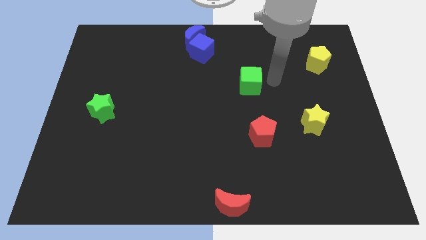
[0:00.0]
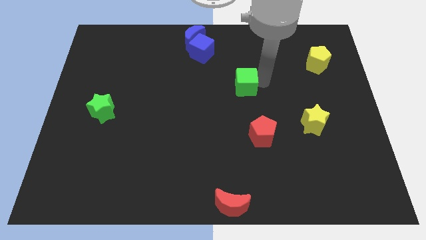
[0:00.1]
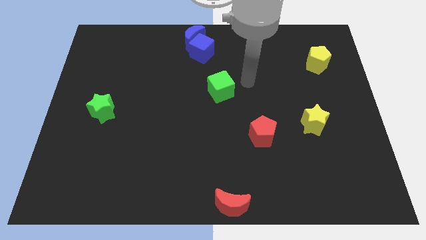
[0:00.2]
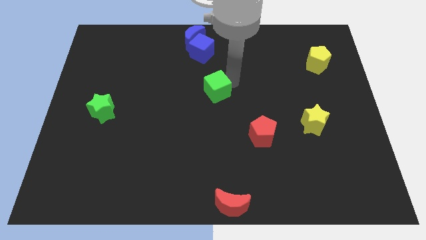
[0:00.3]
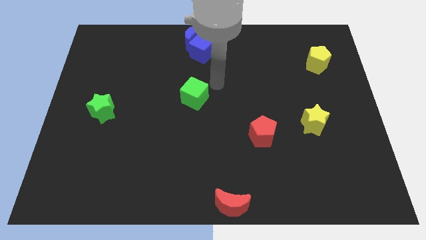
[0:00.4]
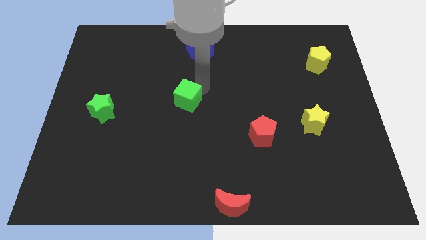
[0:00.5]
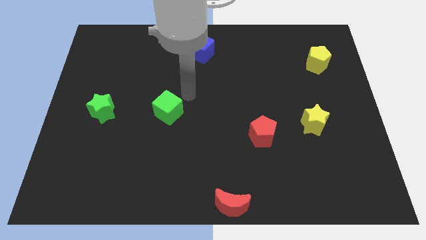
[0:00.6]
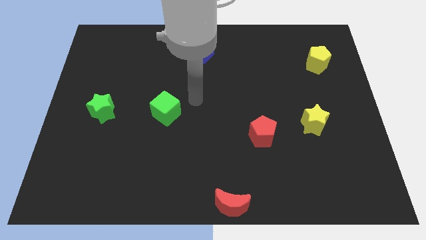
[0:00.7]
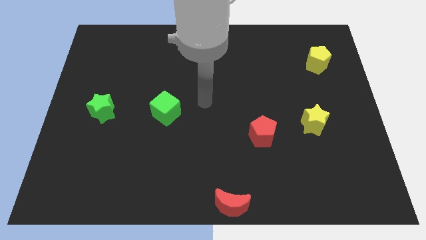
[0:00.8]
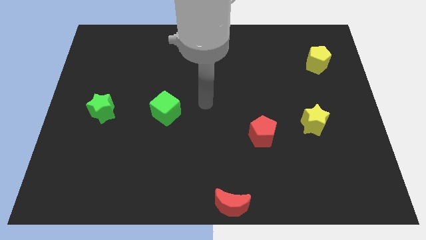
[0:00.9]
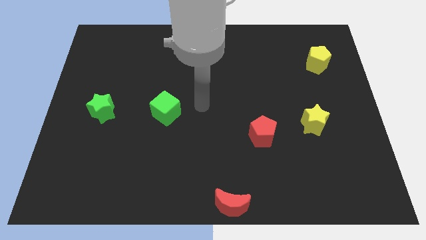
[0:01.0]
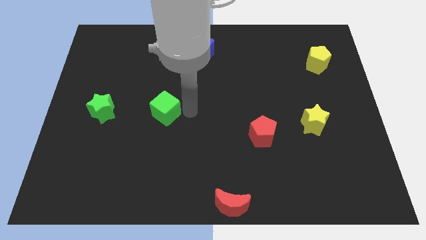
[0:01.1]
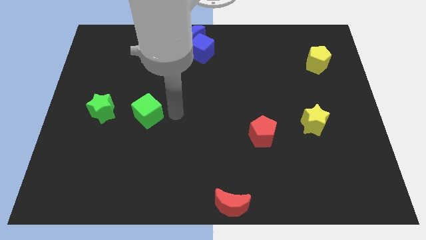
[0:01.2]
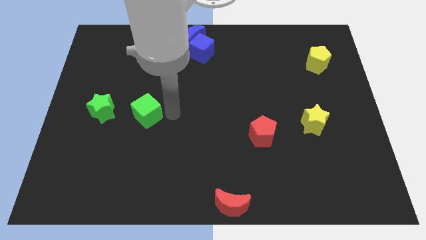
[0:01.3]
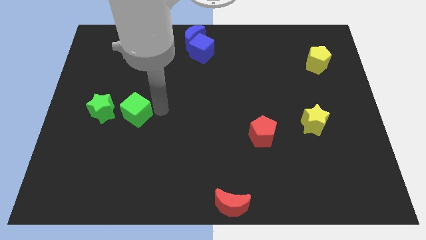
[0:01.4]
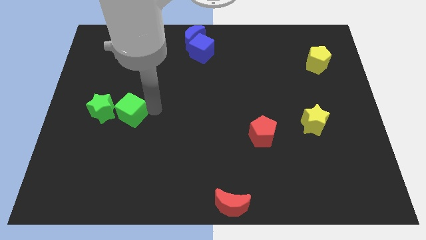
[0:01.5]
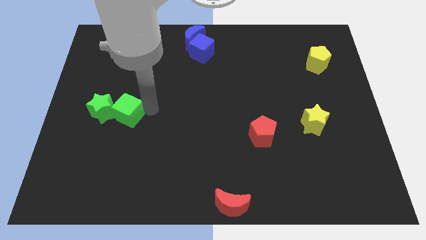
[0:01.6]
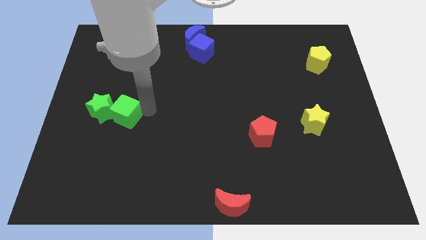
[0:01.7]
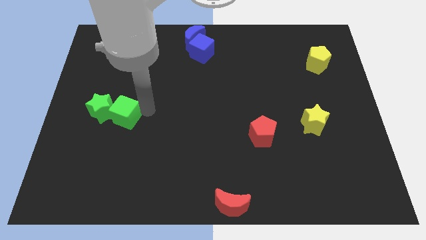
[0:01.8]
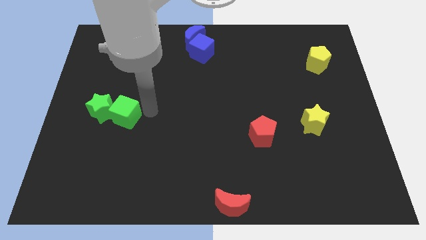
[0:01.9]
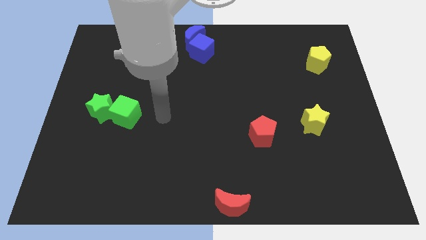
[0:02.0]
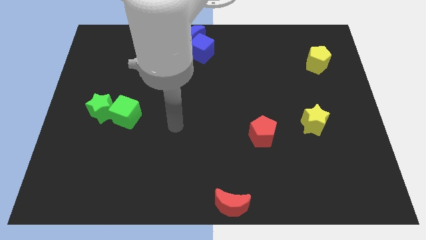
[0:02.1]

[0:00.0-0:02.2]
push green cube towards the green star

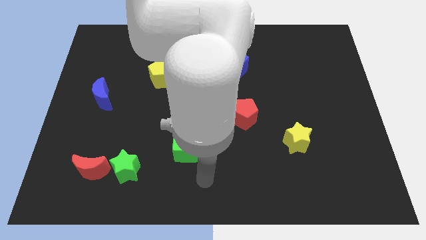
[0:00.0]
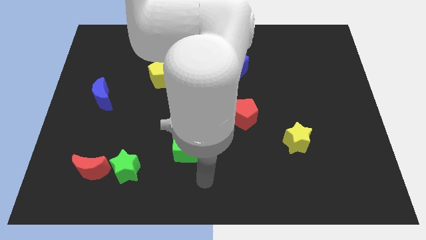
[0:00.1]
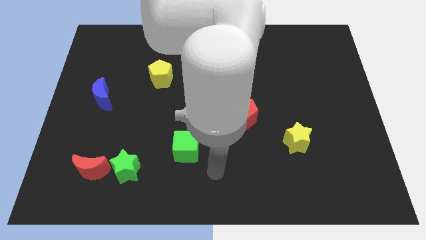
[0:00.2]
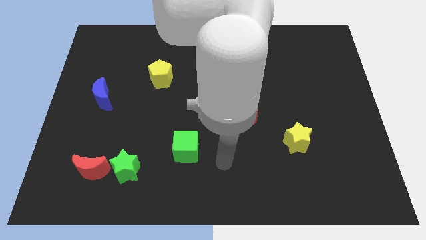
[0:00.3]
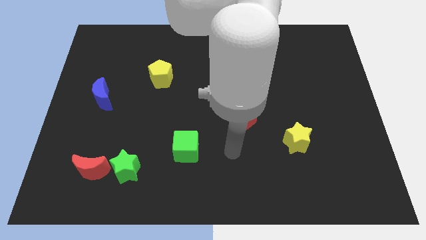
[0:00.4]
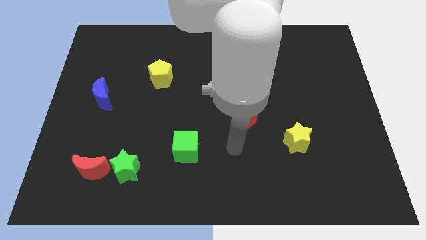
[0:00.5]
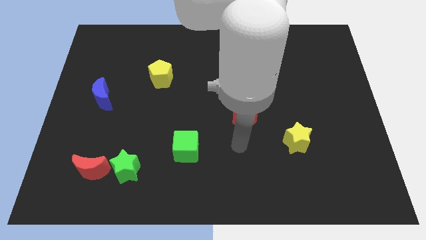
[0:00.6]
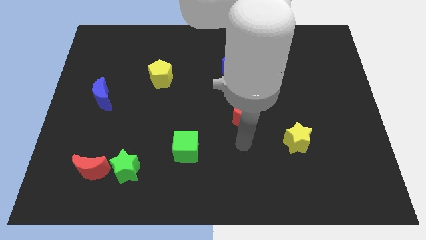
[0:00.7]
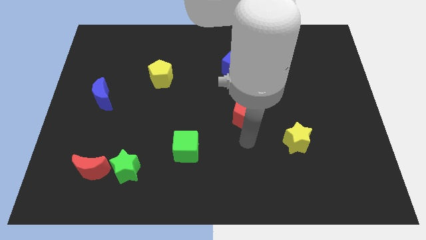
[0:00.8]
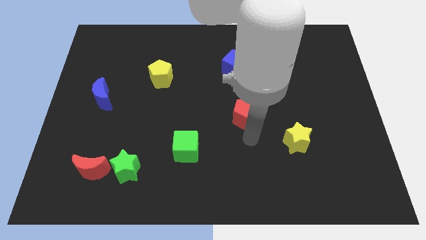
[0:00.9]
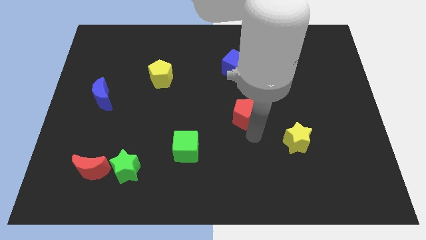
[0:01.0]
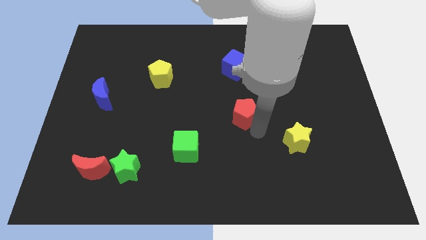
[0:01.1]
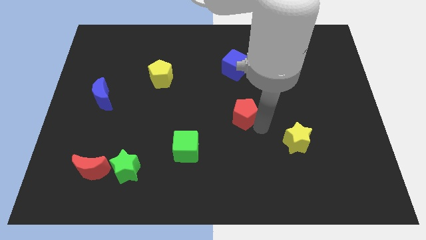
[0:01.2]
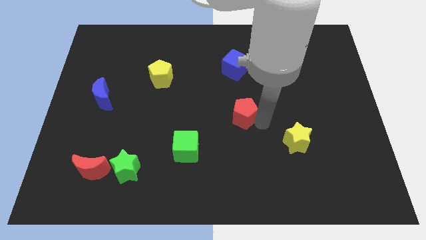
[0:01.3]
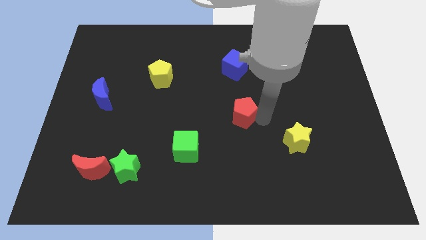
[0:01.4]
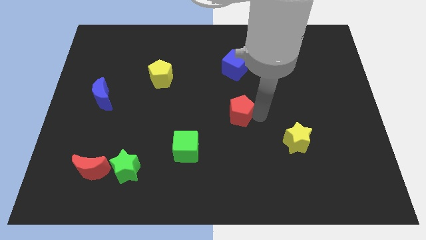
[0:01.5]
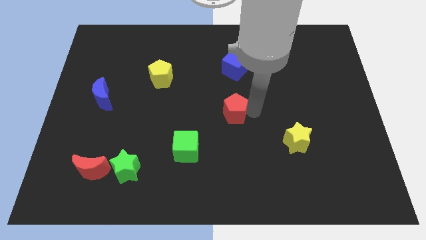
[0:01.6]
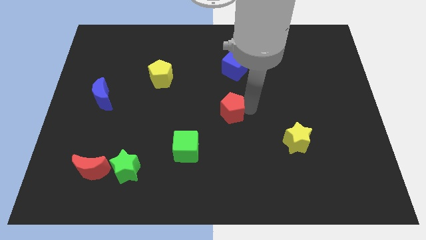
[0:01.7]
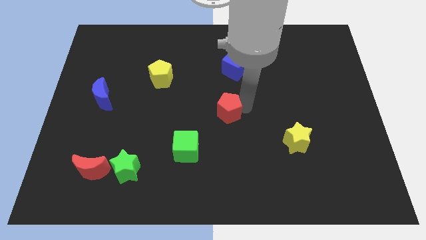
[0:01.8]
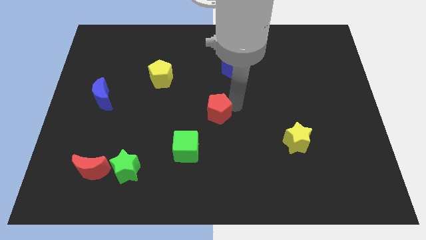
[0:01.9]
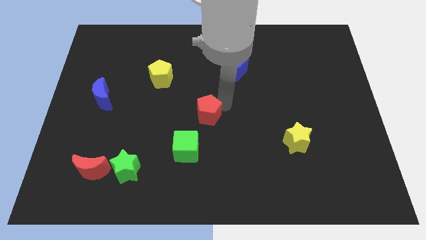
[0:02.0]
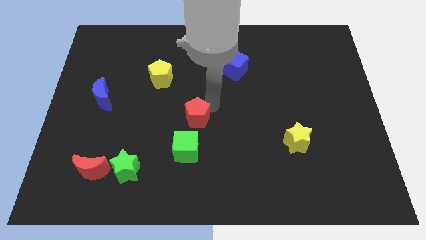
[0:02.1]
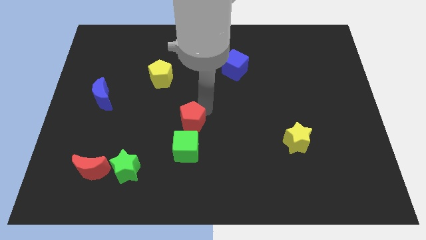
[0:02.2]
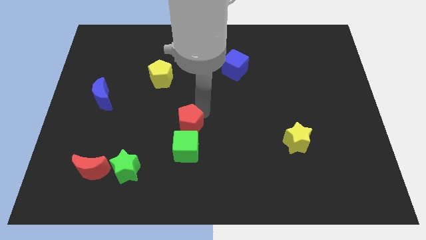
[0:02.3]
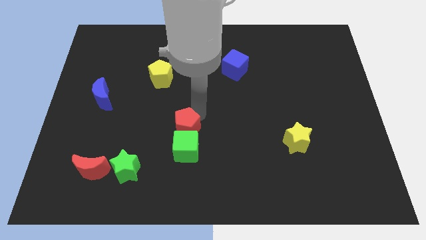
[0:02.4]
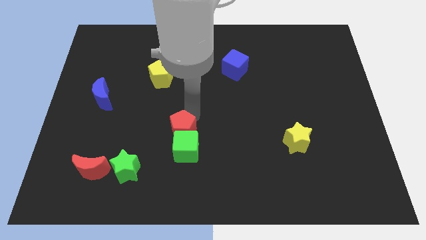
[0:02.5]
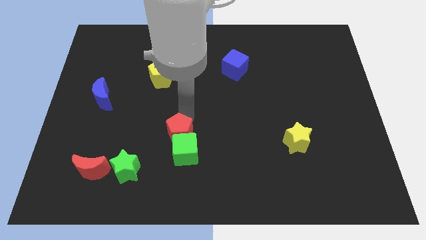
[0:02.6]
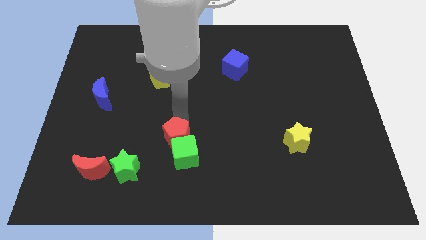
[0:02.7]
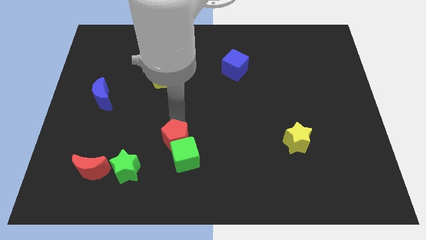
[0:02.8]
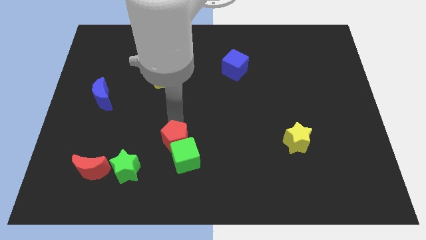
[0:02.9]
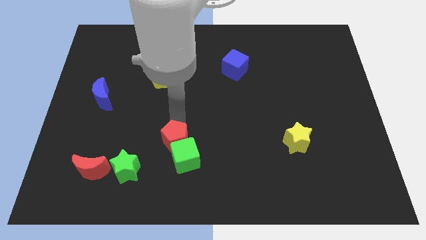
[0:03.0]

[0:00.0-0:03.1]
place the red pentagon to the top of green cube

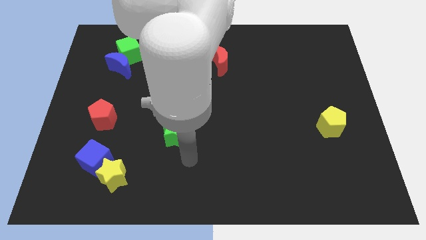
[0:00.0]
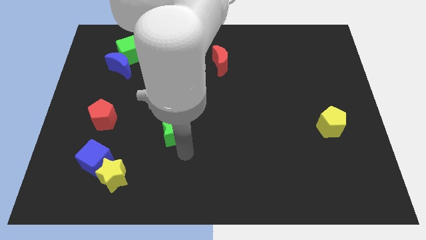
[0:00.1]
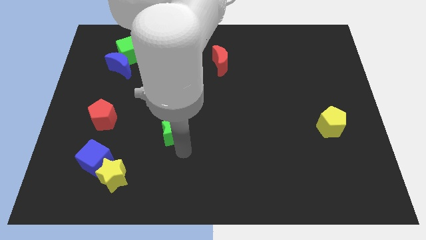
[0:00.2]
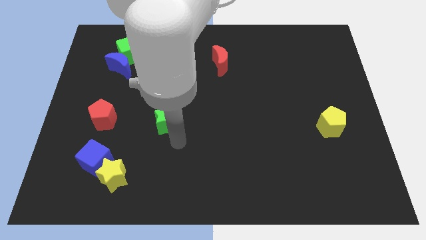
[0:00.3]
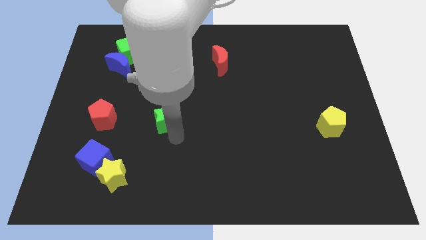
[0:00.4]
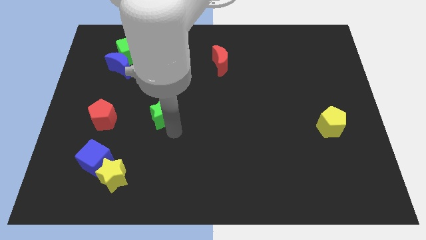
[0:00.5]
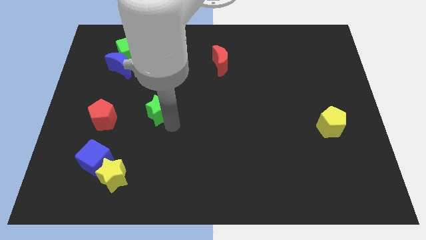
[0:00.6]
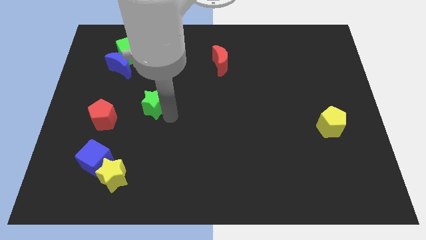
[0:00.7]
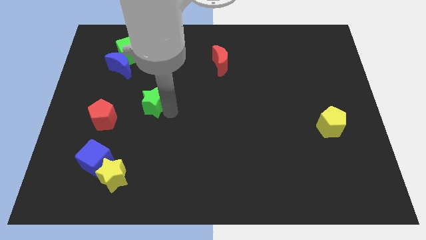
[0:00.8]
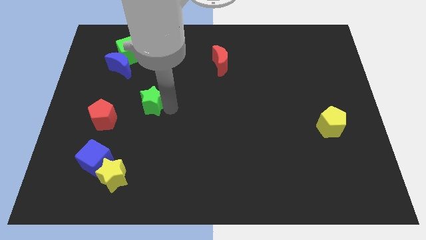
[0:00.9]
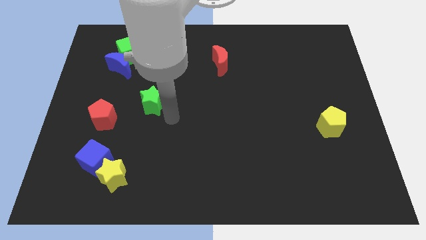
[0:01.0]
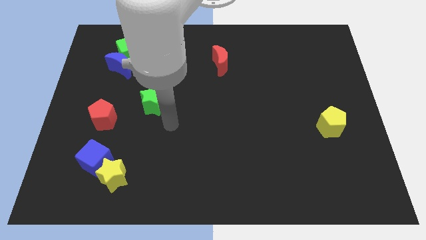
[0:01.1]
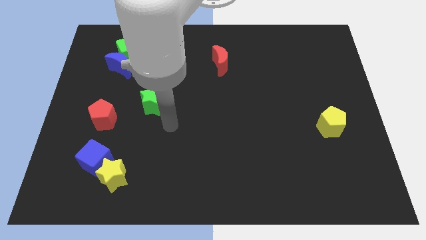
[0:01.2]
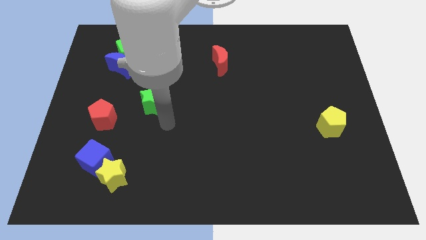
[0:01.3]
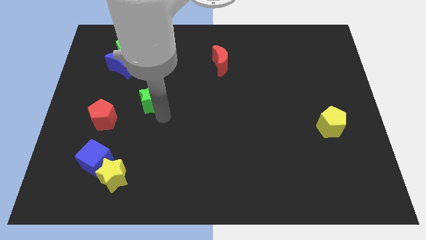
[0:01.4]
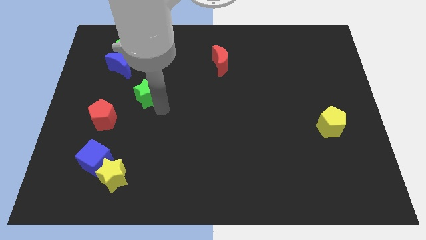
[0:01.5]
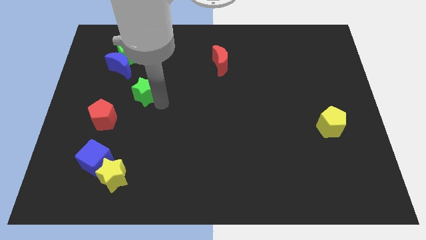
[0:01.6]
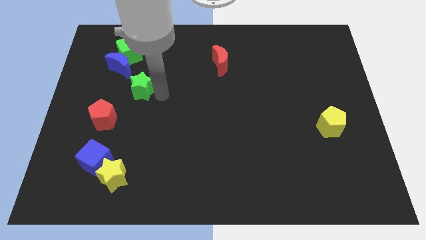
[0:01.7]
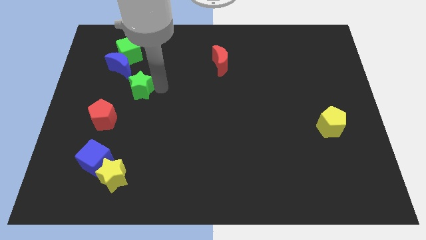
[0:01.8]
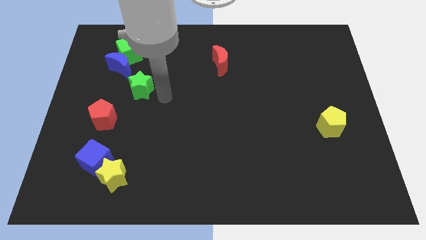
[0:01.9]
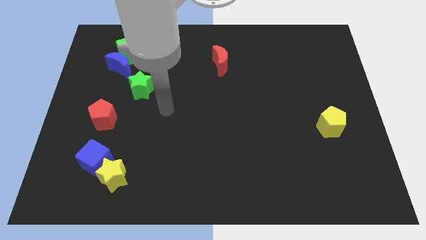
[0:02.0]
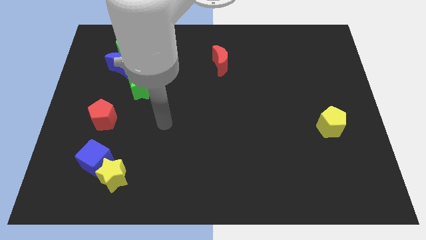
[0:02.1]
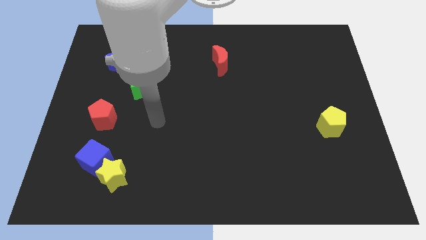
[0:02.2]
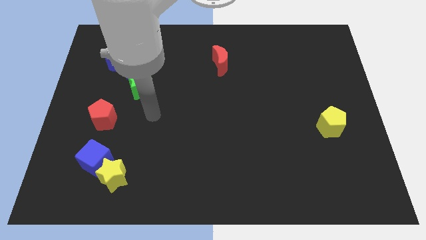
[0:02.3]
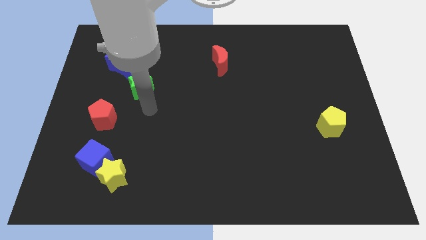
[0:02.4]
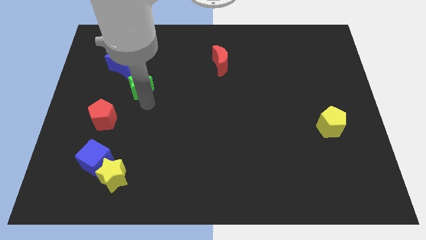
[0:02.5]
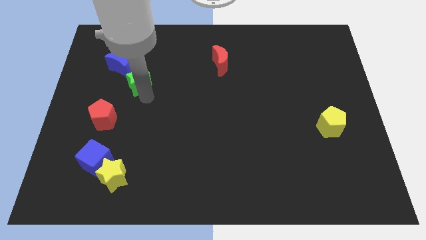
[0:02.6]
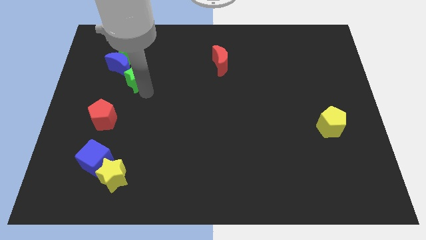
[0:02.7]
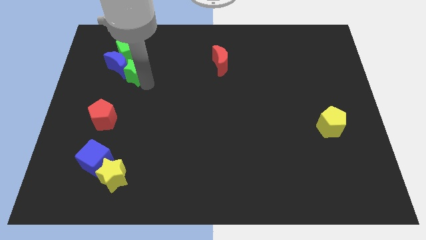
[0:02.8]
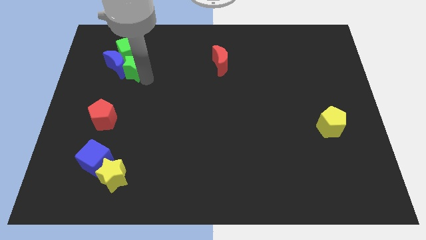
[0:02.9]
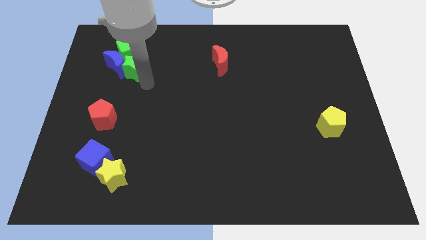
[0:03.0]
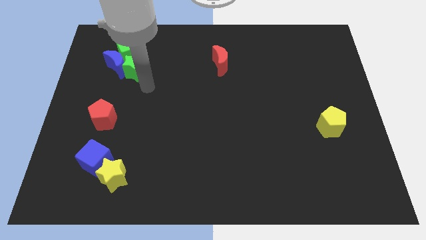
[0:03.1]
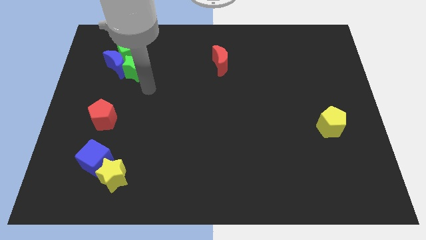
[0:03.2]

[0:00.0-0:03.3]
push the green star into the blue moon

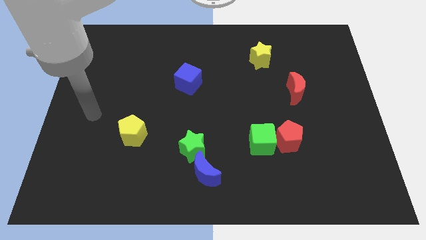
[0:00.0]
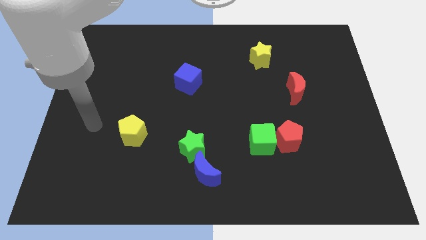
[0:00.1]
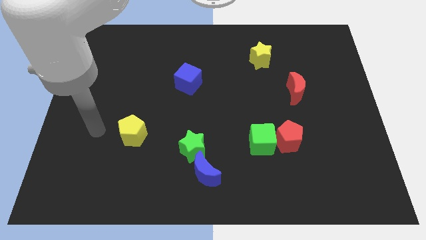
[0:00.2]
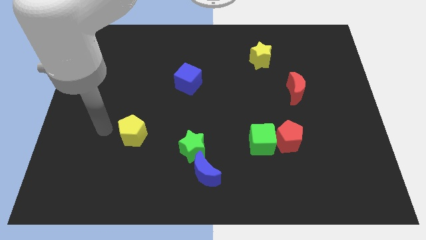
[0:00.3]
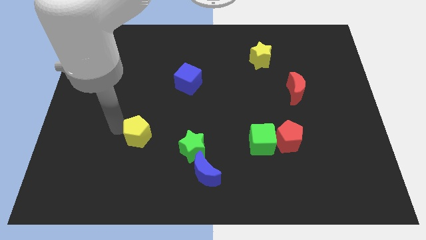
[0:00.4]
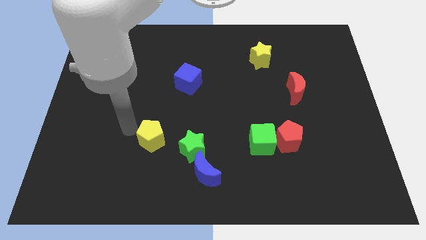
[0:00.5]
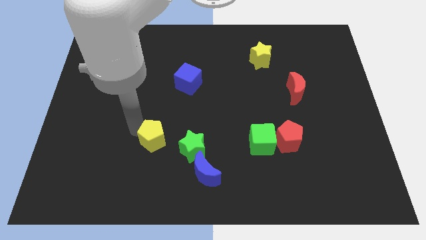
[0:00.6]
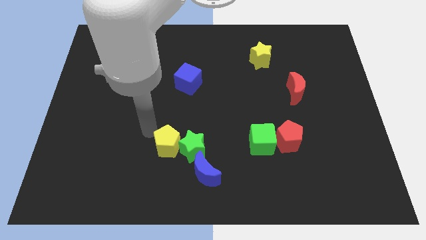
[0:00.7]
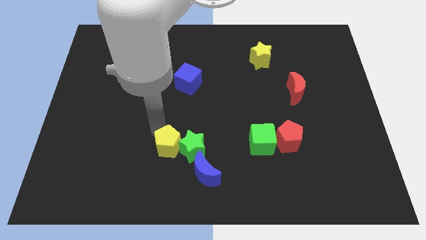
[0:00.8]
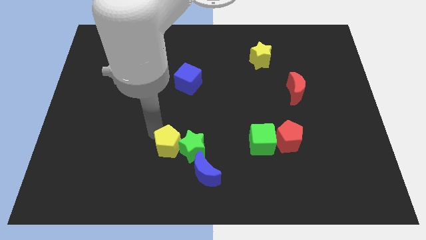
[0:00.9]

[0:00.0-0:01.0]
push yellow pentagon towards green star
